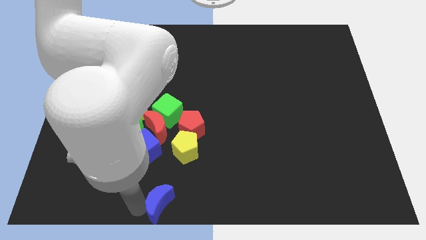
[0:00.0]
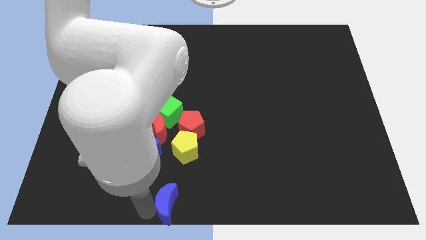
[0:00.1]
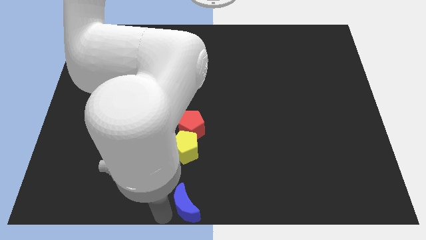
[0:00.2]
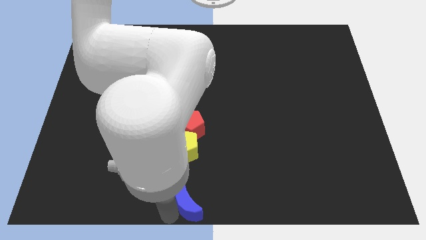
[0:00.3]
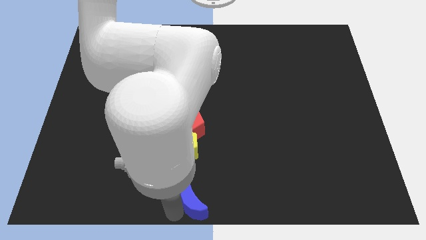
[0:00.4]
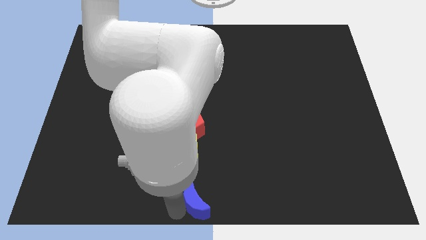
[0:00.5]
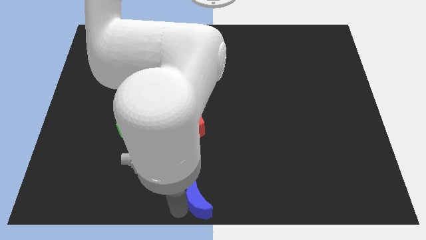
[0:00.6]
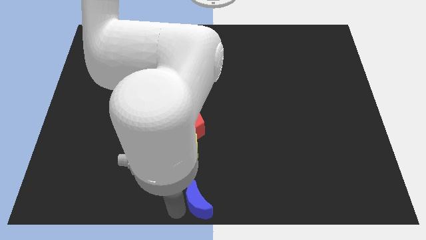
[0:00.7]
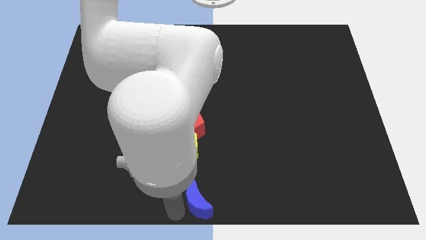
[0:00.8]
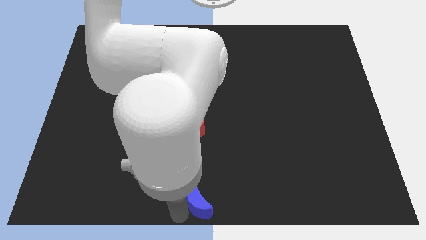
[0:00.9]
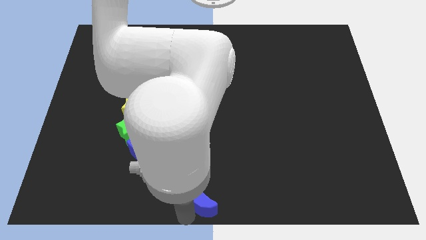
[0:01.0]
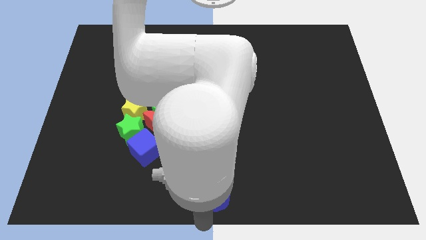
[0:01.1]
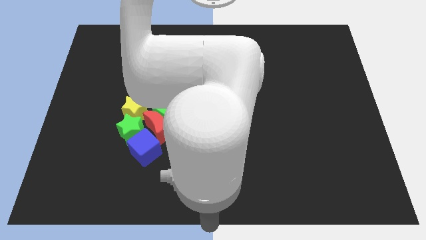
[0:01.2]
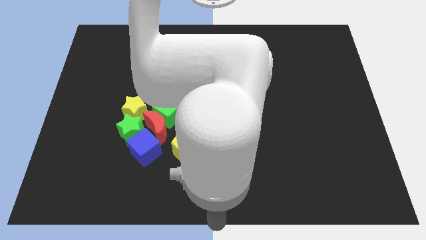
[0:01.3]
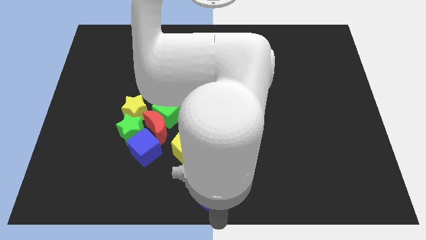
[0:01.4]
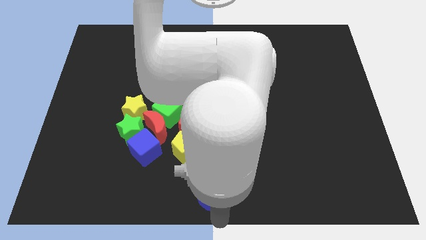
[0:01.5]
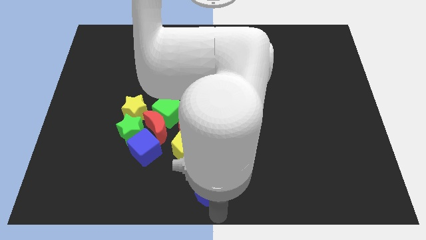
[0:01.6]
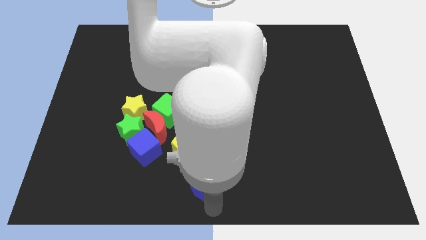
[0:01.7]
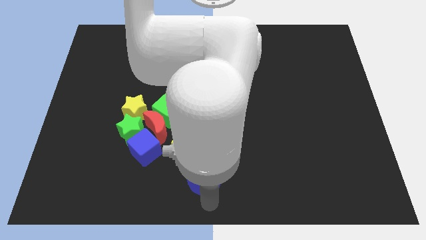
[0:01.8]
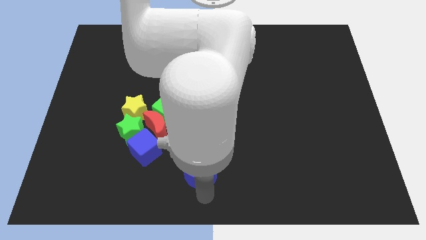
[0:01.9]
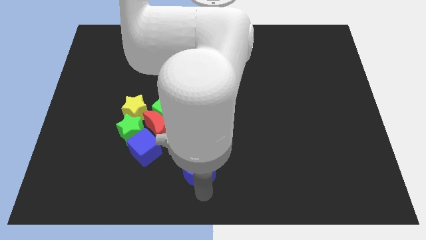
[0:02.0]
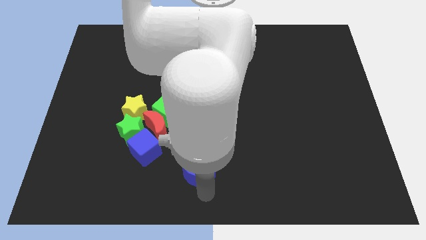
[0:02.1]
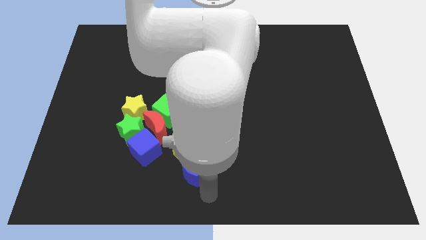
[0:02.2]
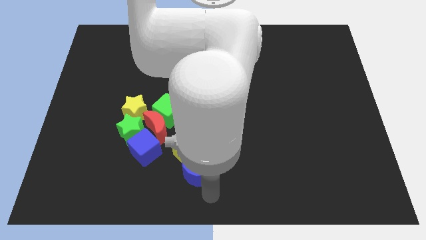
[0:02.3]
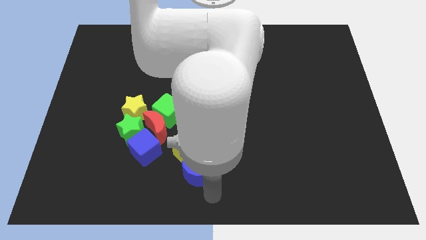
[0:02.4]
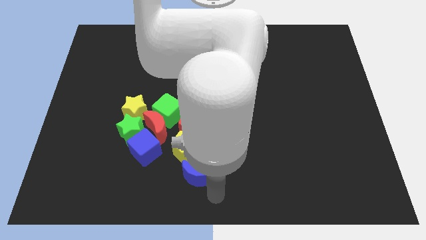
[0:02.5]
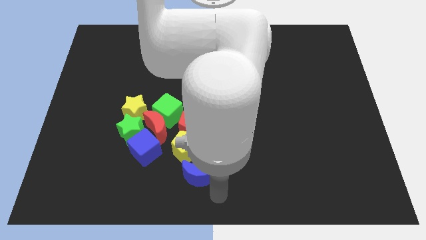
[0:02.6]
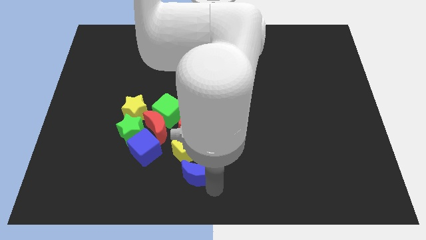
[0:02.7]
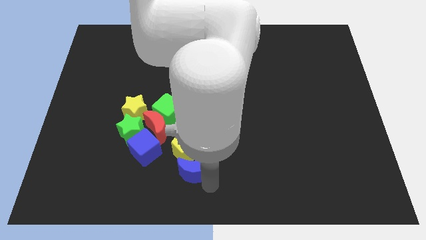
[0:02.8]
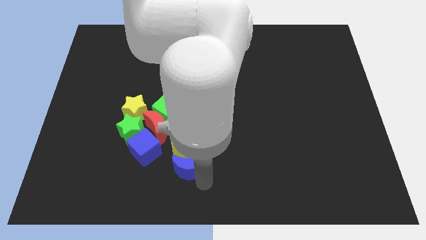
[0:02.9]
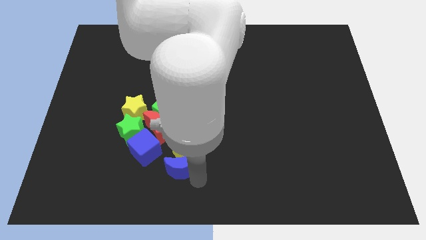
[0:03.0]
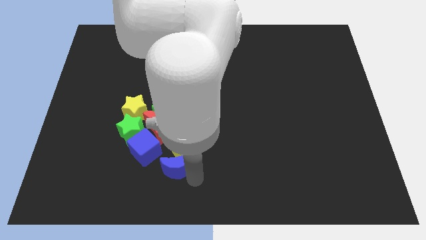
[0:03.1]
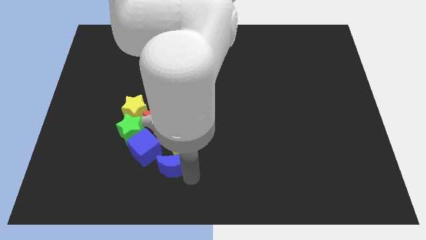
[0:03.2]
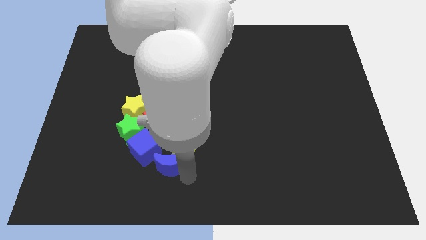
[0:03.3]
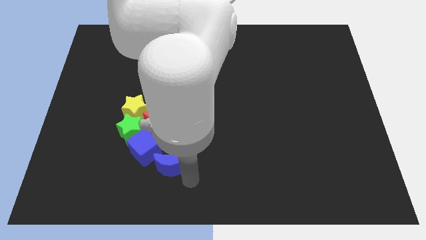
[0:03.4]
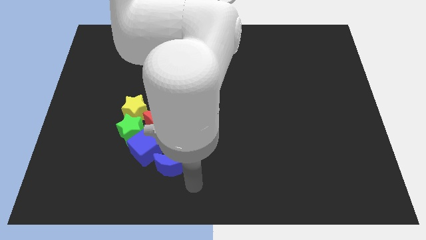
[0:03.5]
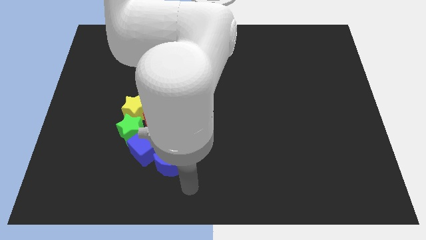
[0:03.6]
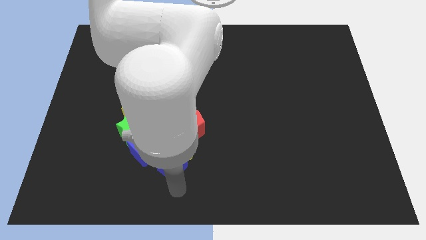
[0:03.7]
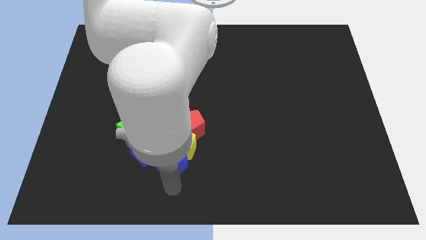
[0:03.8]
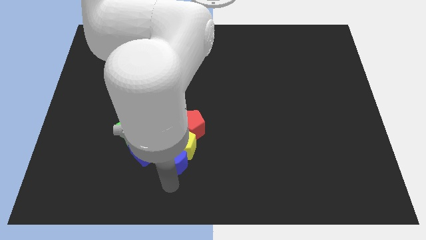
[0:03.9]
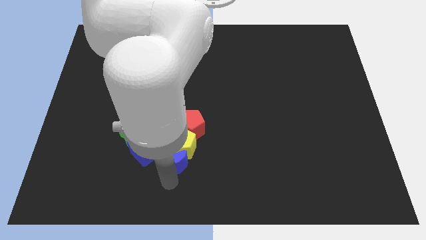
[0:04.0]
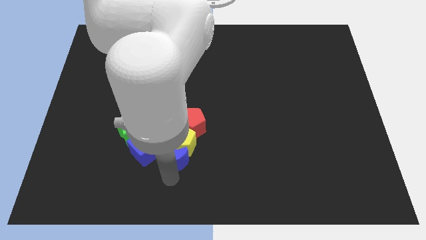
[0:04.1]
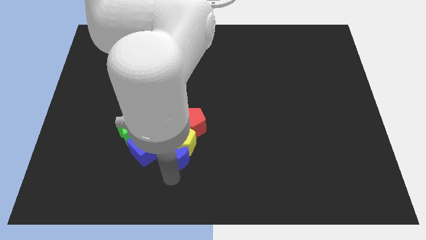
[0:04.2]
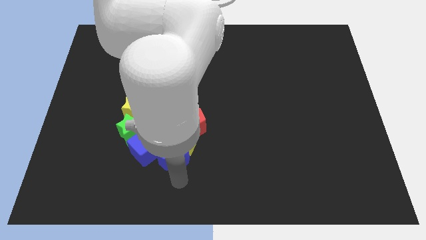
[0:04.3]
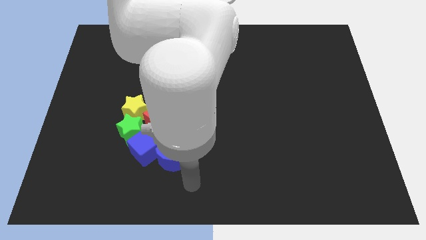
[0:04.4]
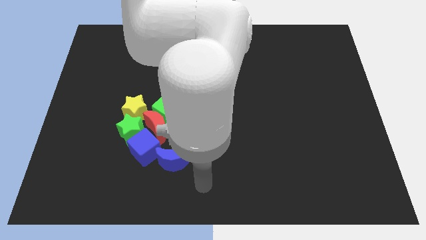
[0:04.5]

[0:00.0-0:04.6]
push the blue moon into the group of blocks

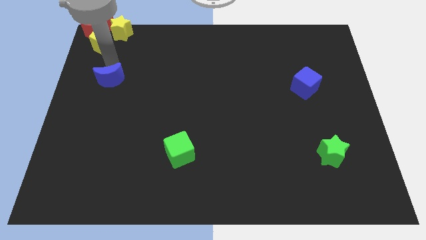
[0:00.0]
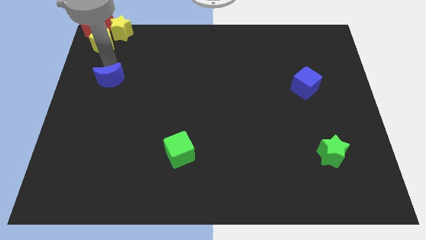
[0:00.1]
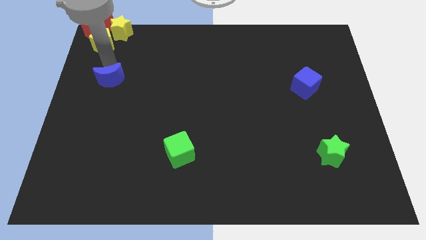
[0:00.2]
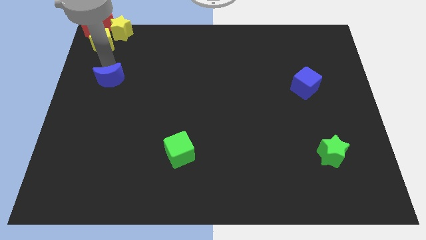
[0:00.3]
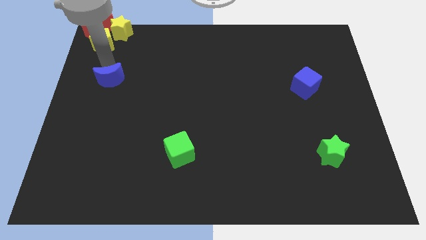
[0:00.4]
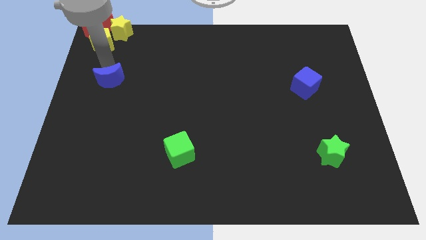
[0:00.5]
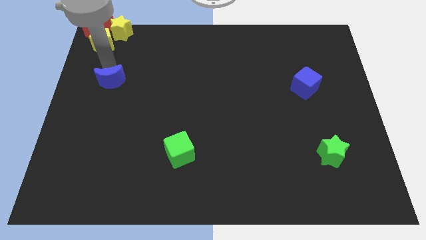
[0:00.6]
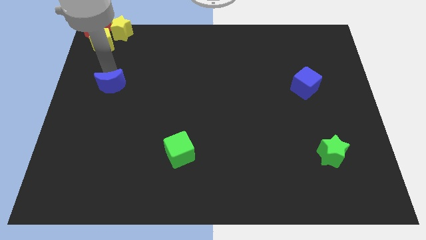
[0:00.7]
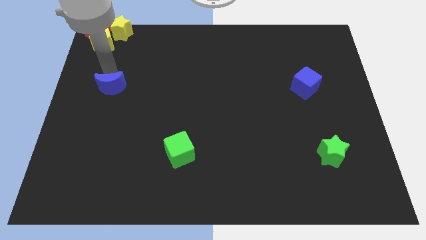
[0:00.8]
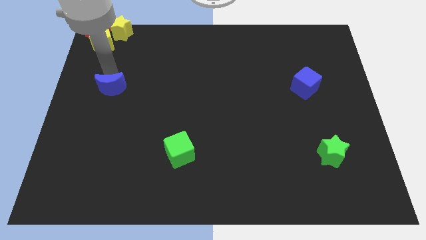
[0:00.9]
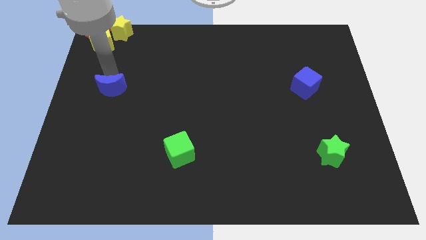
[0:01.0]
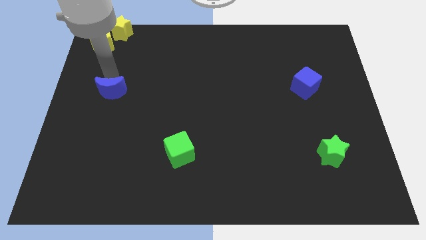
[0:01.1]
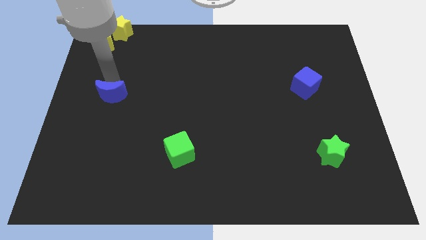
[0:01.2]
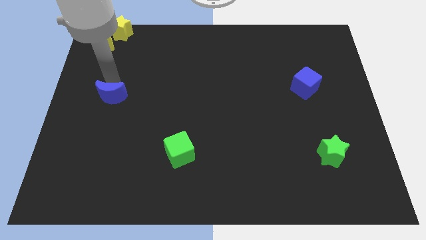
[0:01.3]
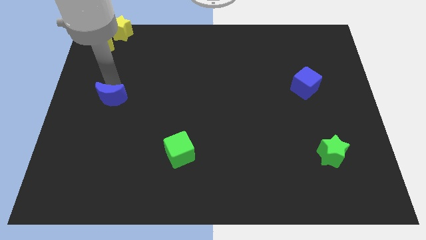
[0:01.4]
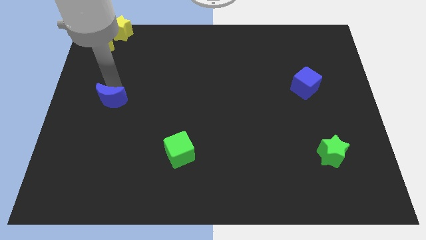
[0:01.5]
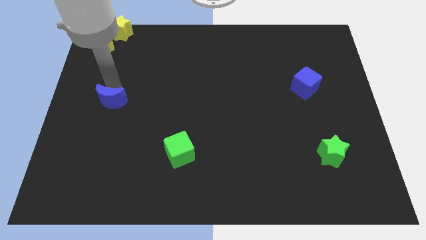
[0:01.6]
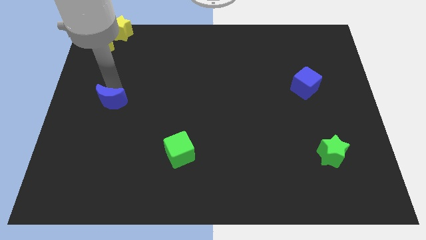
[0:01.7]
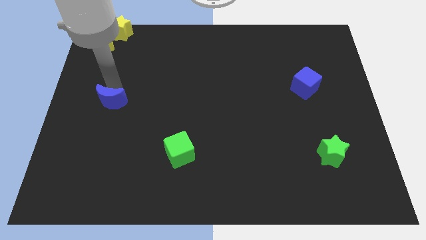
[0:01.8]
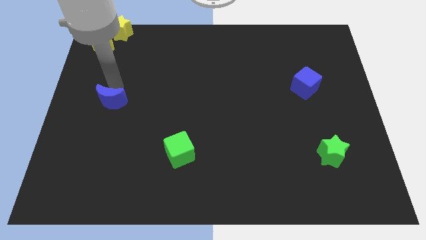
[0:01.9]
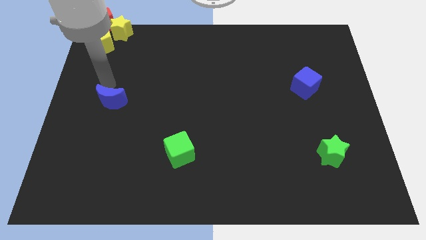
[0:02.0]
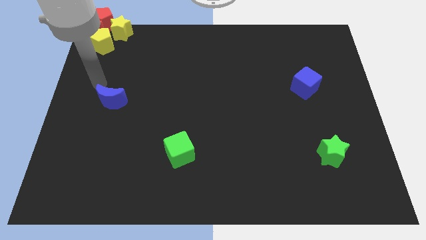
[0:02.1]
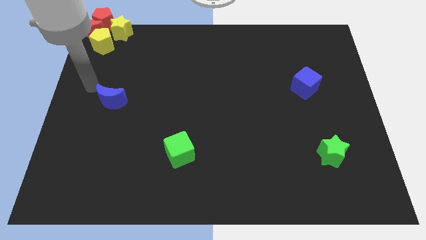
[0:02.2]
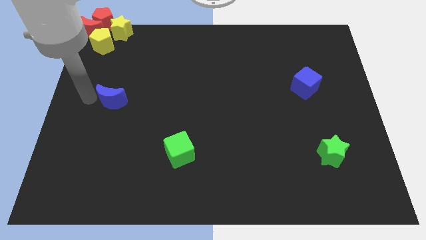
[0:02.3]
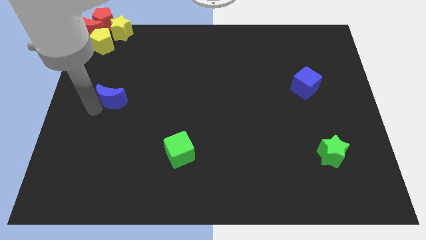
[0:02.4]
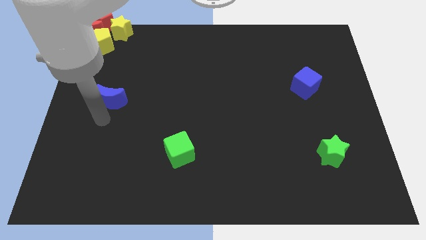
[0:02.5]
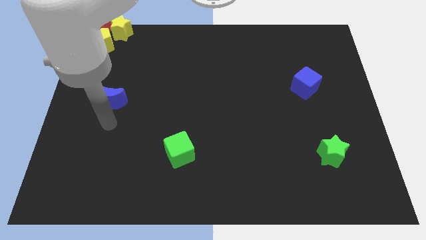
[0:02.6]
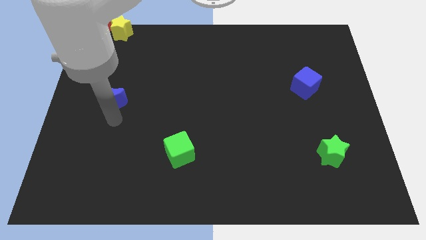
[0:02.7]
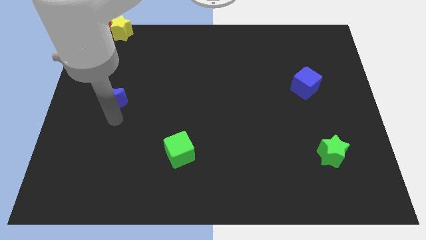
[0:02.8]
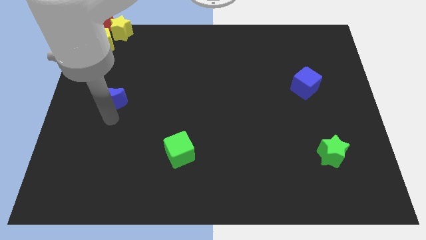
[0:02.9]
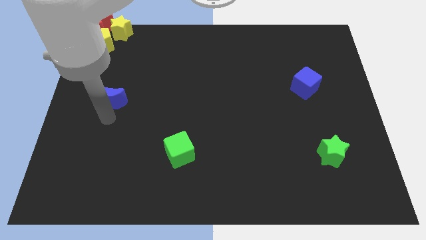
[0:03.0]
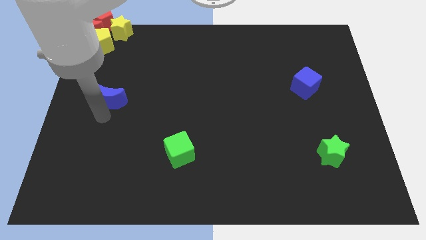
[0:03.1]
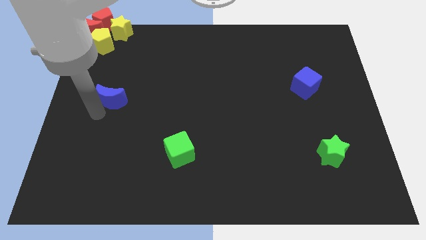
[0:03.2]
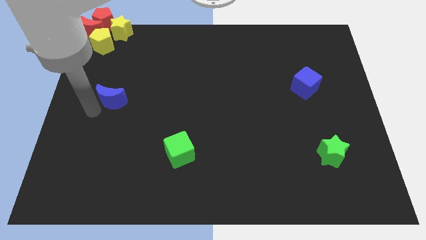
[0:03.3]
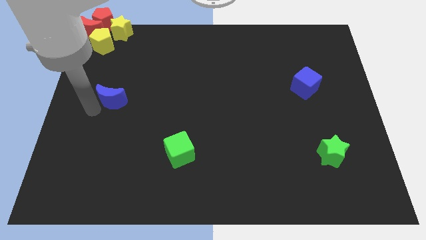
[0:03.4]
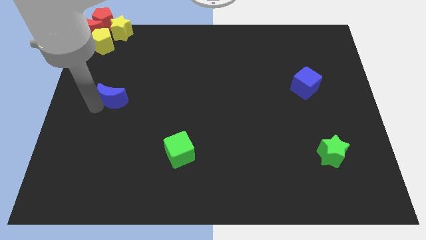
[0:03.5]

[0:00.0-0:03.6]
push the blue crescent slightly to the bottom

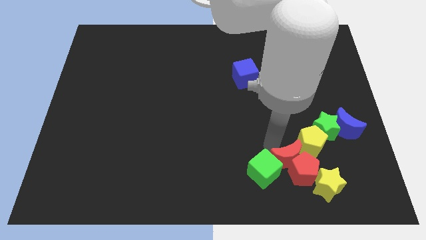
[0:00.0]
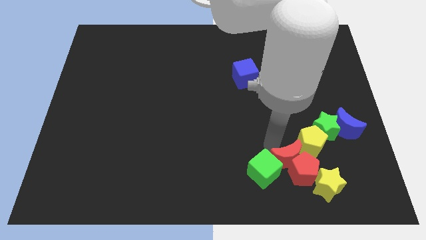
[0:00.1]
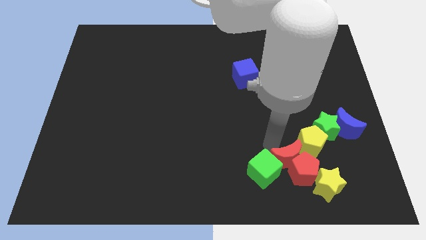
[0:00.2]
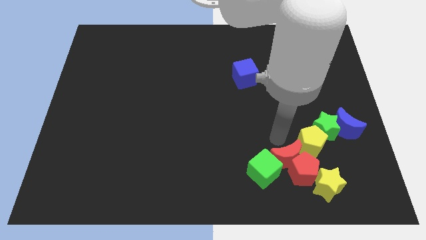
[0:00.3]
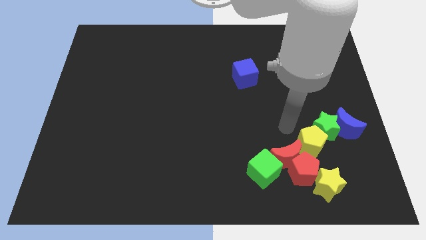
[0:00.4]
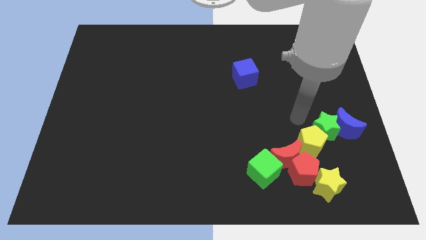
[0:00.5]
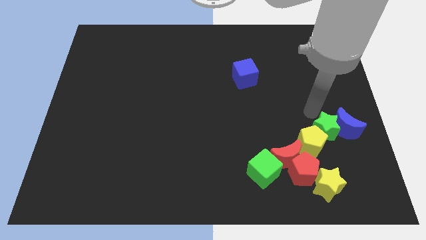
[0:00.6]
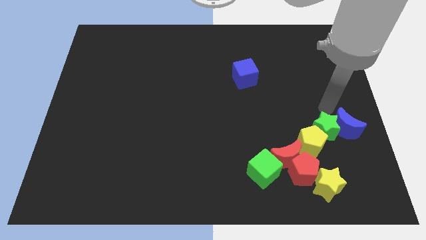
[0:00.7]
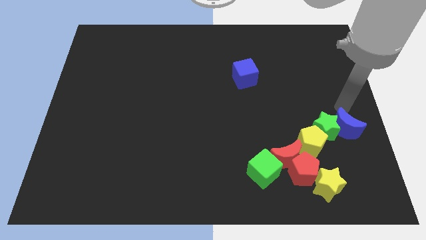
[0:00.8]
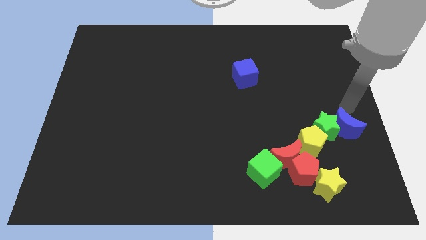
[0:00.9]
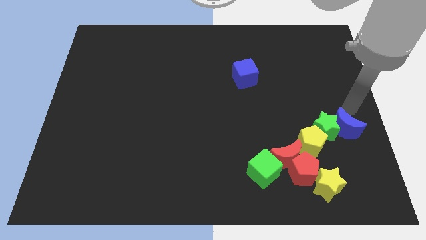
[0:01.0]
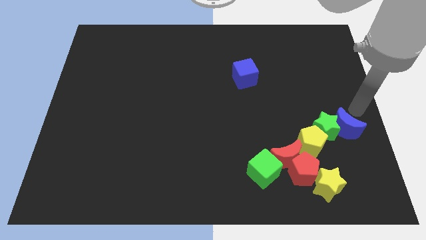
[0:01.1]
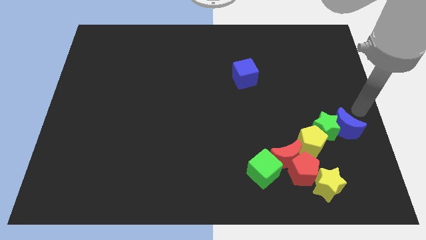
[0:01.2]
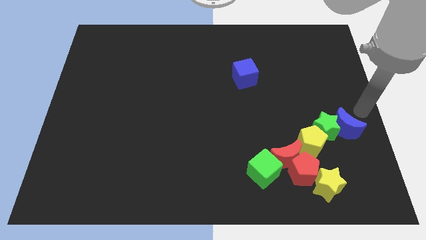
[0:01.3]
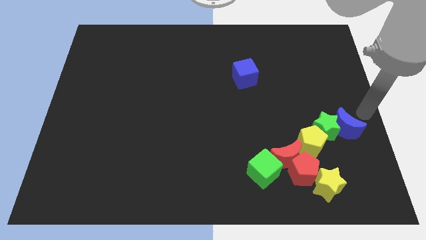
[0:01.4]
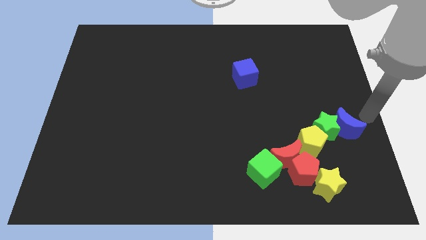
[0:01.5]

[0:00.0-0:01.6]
move your arm away from the red moon
